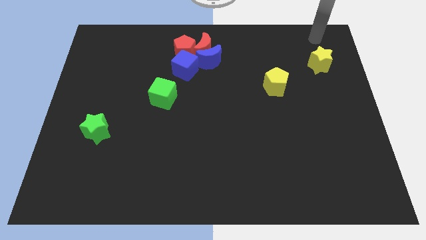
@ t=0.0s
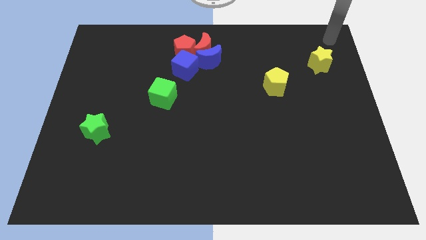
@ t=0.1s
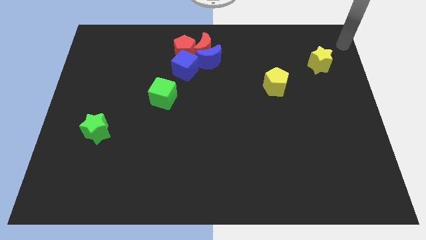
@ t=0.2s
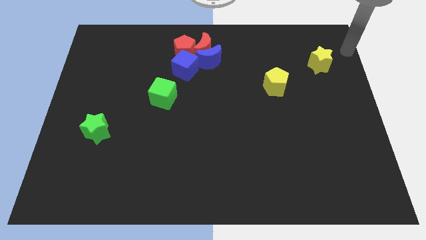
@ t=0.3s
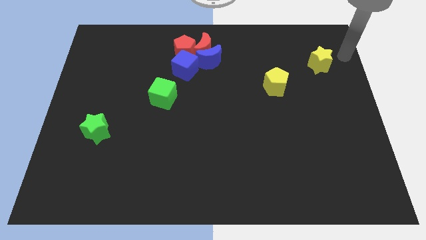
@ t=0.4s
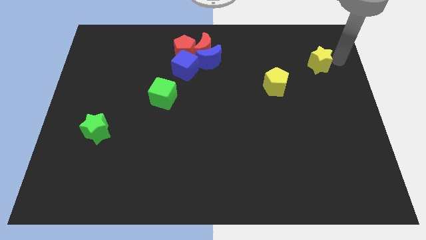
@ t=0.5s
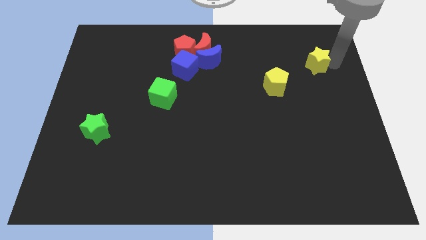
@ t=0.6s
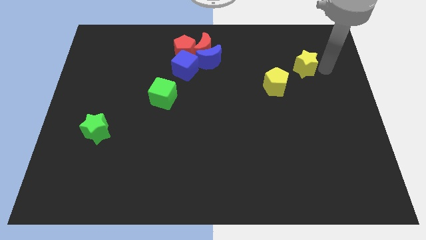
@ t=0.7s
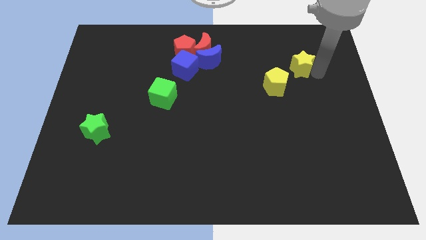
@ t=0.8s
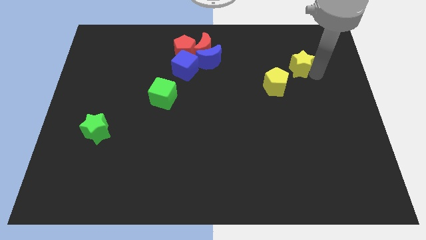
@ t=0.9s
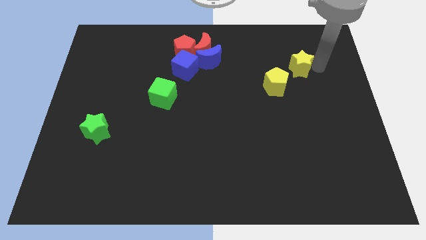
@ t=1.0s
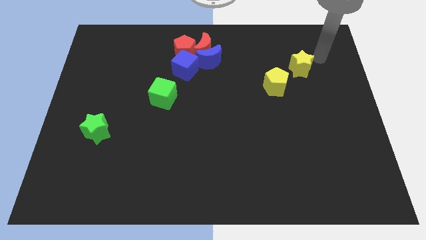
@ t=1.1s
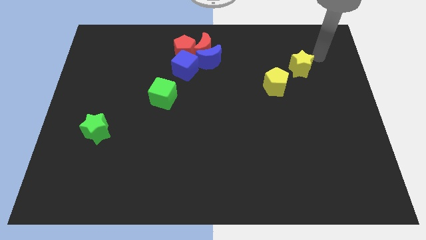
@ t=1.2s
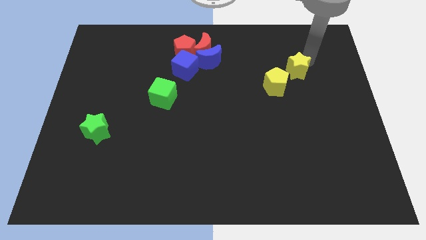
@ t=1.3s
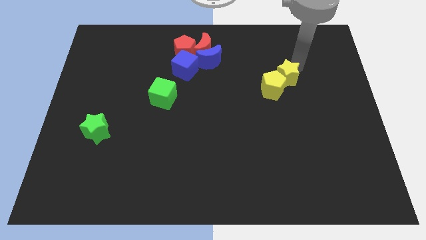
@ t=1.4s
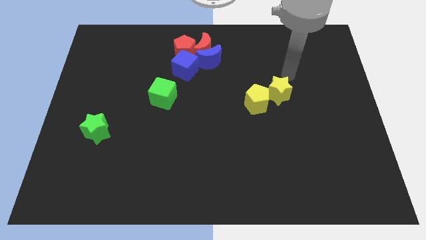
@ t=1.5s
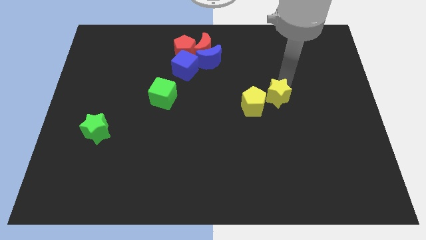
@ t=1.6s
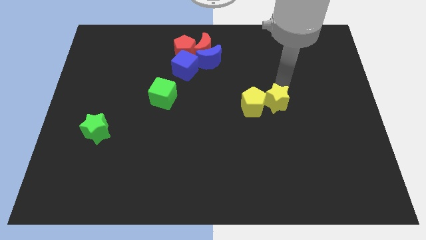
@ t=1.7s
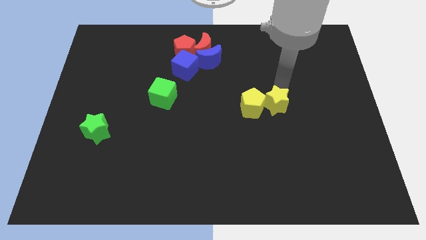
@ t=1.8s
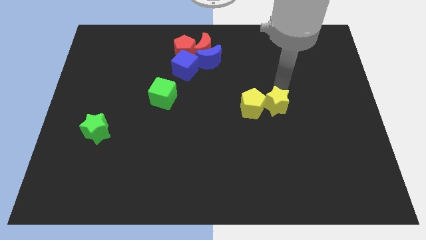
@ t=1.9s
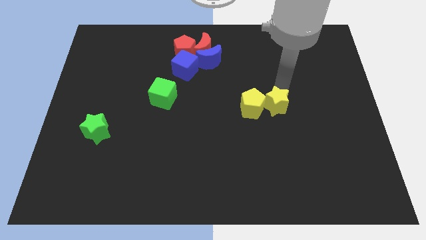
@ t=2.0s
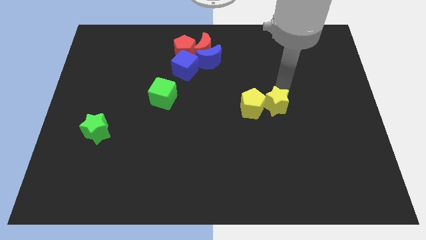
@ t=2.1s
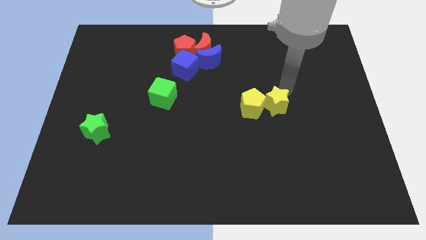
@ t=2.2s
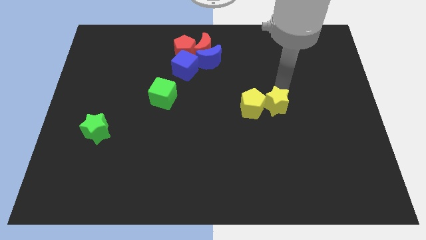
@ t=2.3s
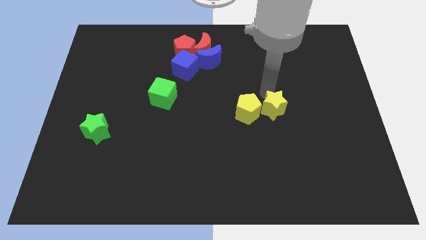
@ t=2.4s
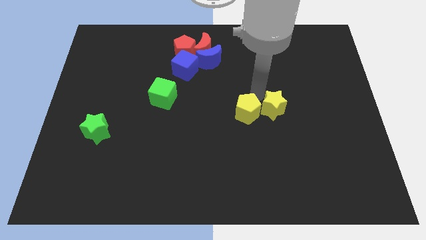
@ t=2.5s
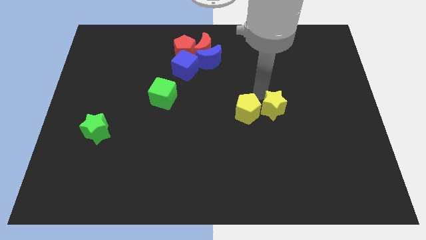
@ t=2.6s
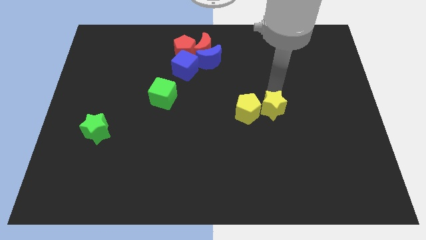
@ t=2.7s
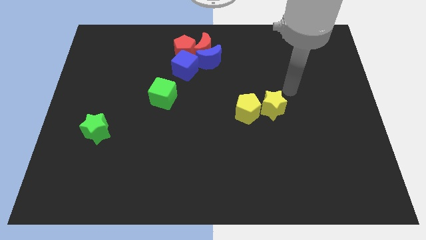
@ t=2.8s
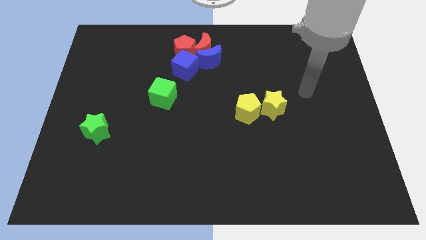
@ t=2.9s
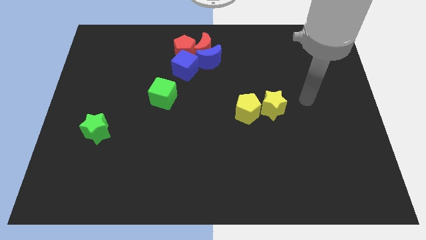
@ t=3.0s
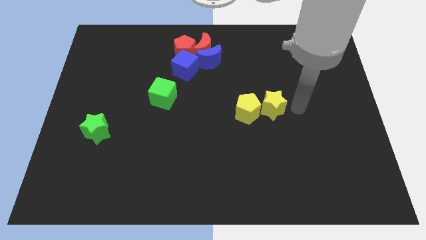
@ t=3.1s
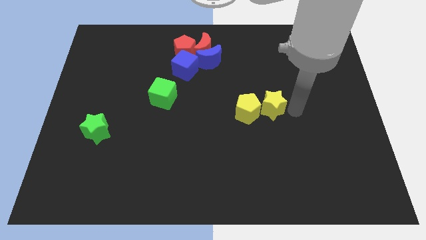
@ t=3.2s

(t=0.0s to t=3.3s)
push the yellow blocks towards the bottom side of the board

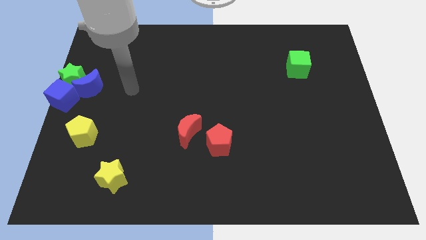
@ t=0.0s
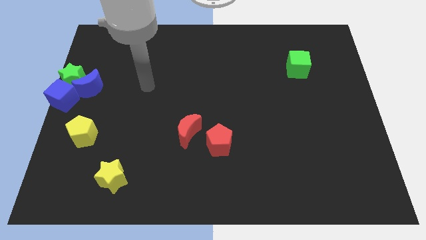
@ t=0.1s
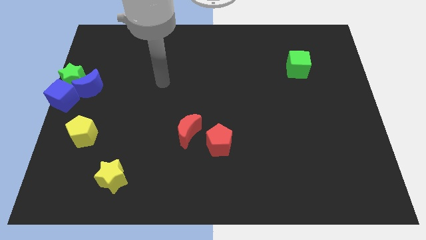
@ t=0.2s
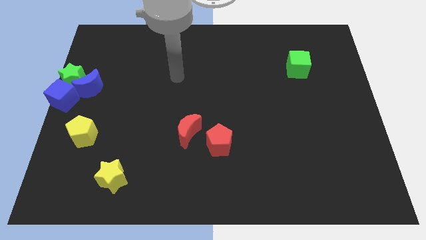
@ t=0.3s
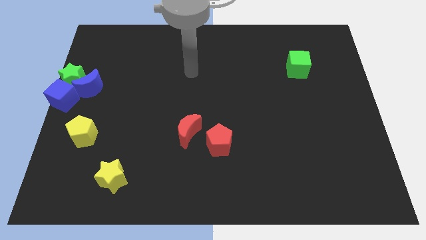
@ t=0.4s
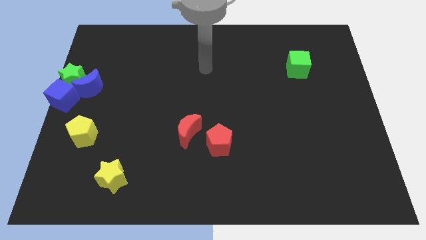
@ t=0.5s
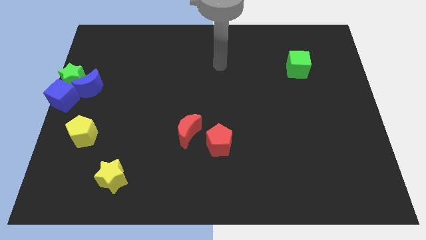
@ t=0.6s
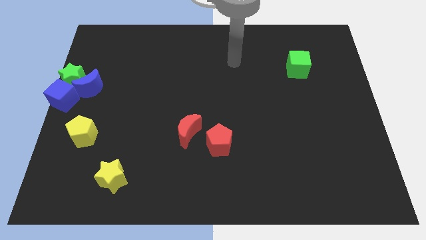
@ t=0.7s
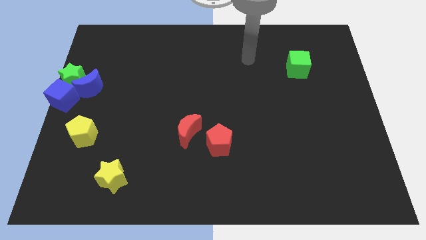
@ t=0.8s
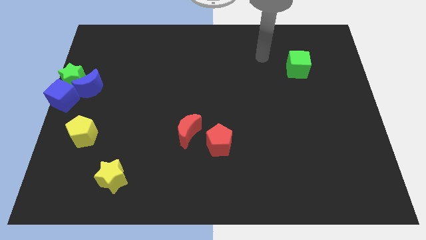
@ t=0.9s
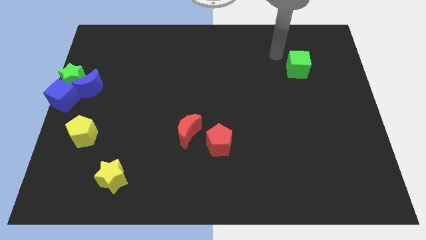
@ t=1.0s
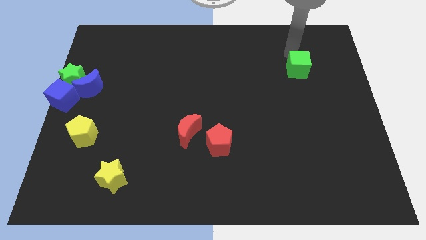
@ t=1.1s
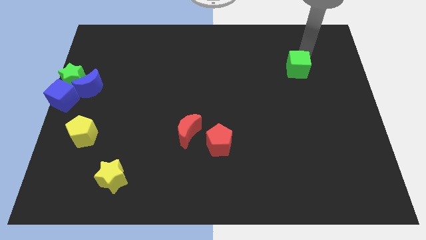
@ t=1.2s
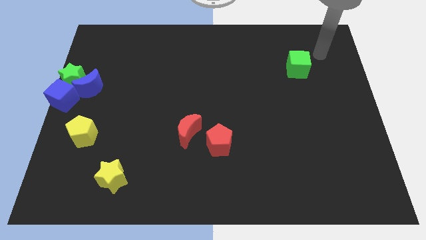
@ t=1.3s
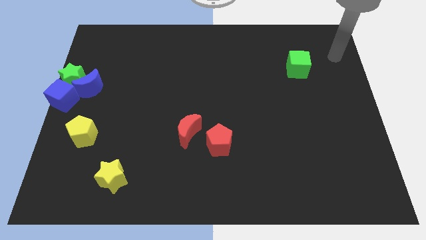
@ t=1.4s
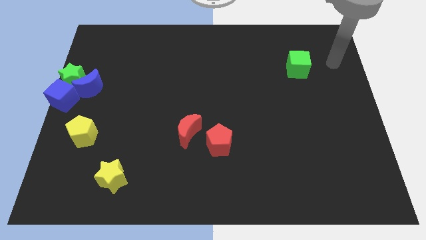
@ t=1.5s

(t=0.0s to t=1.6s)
move your arm to right side of the green cube

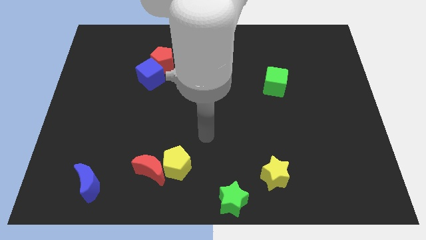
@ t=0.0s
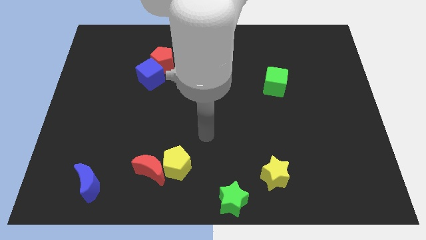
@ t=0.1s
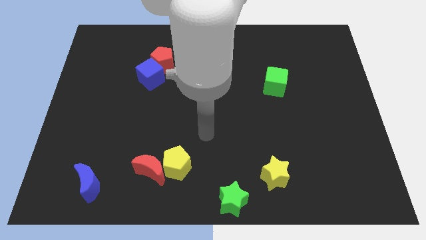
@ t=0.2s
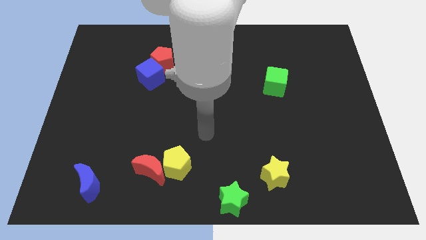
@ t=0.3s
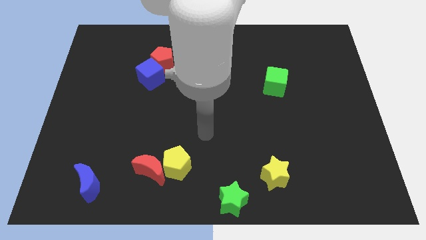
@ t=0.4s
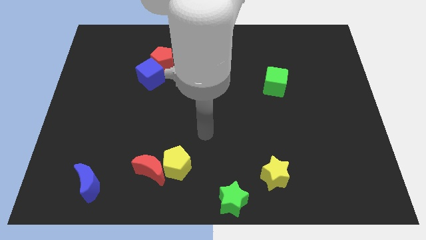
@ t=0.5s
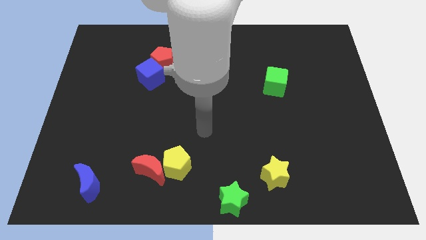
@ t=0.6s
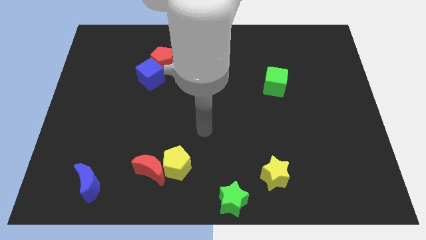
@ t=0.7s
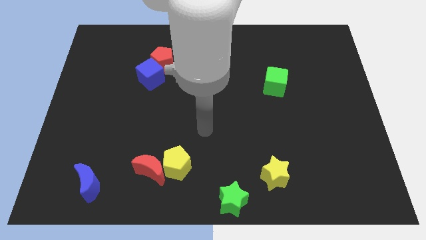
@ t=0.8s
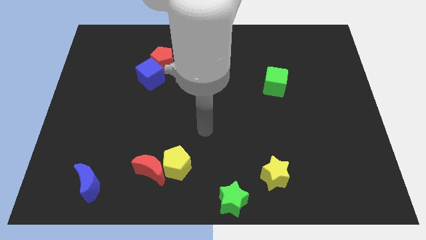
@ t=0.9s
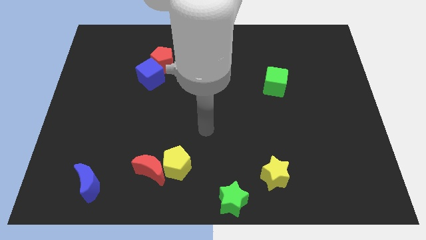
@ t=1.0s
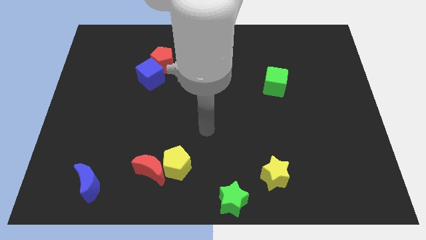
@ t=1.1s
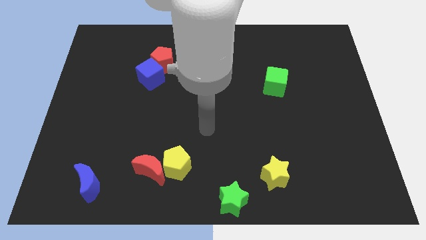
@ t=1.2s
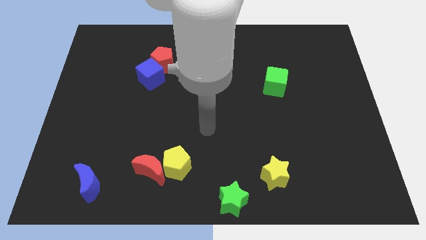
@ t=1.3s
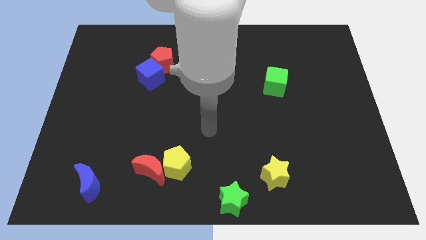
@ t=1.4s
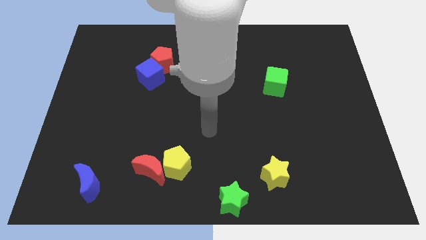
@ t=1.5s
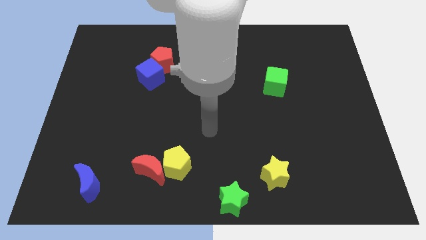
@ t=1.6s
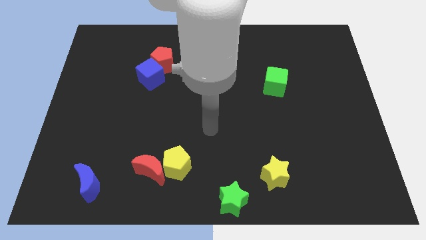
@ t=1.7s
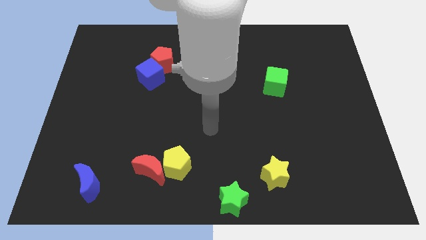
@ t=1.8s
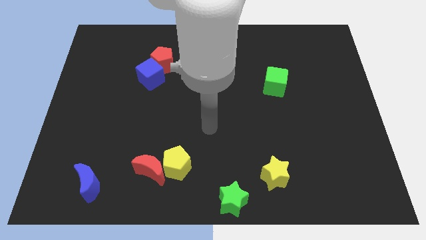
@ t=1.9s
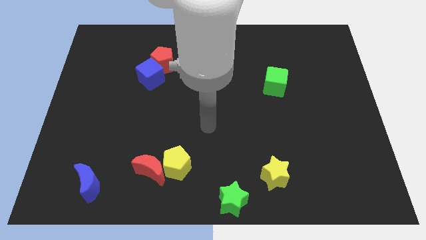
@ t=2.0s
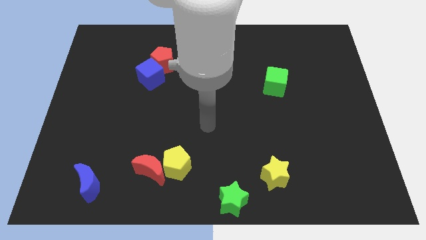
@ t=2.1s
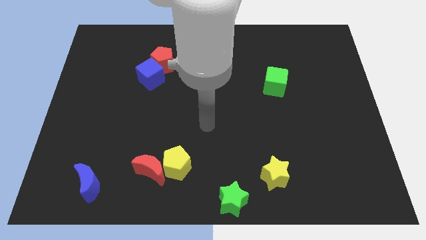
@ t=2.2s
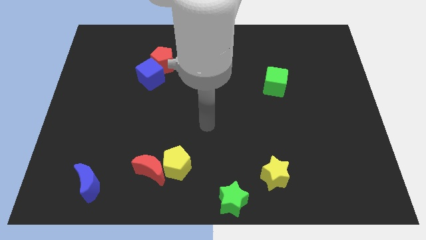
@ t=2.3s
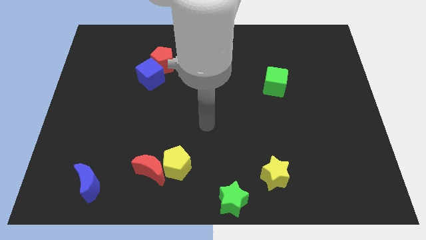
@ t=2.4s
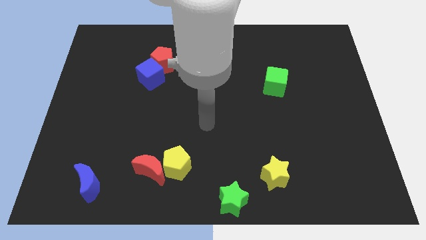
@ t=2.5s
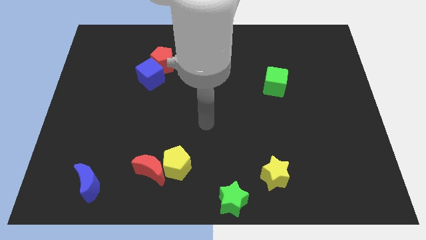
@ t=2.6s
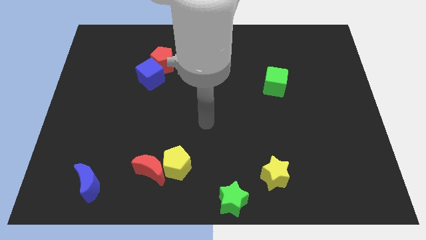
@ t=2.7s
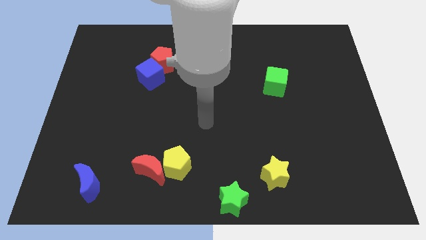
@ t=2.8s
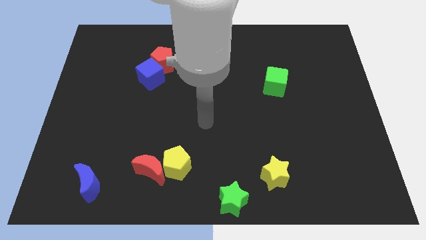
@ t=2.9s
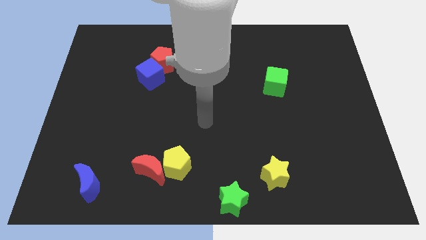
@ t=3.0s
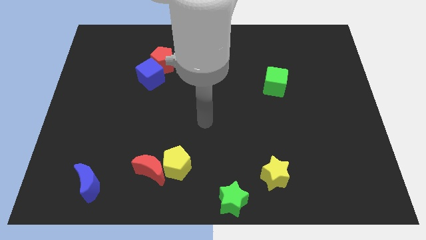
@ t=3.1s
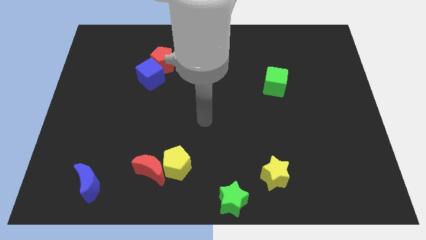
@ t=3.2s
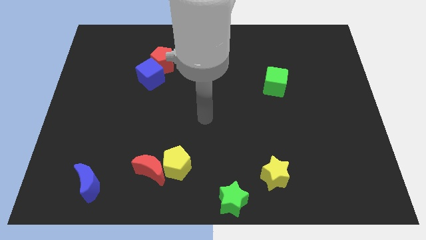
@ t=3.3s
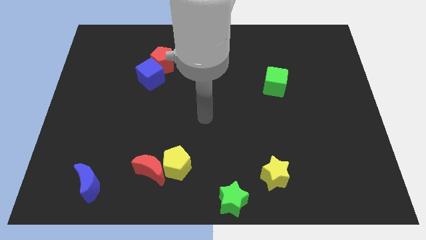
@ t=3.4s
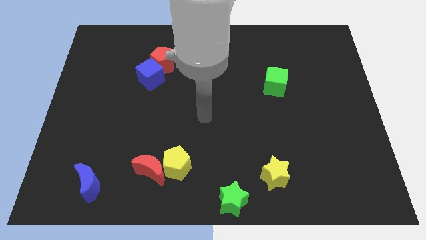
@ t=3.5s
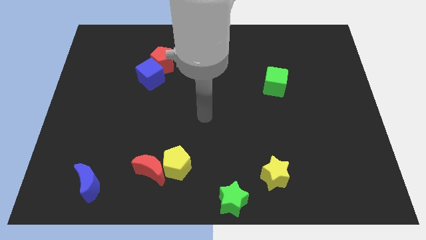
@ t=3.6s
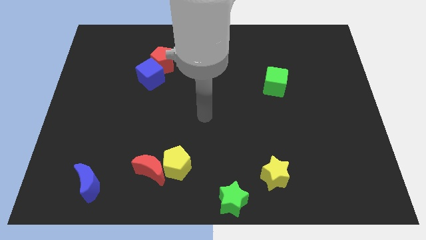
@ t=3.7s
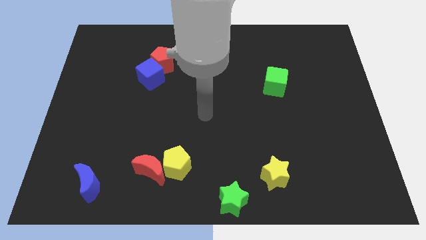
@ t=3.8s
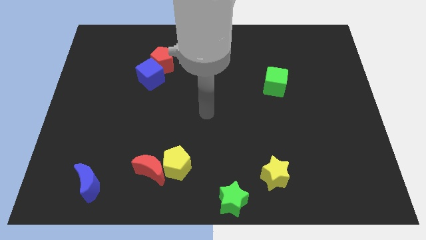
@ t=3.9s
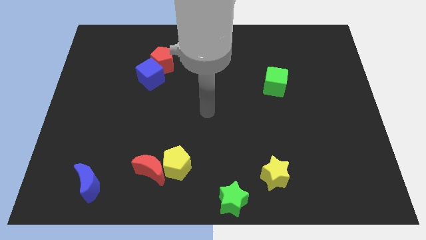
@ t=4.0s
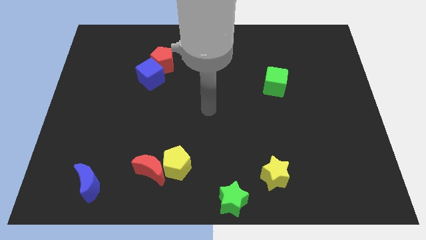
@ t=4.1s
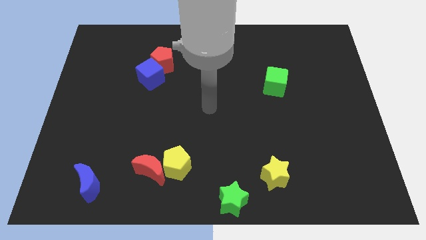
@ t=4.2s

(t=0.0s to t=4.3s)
place the arm in the center
